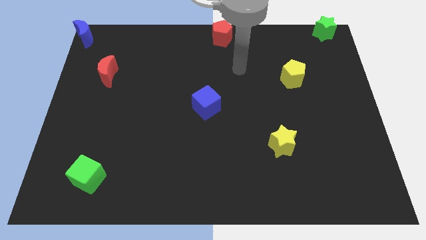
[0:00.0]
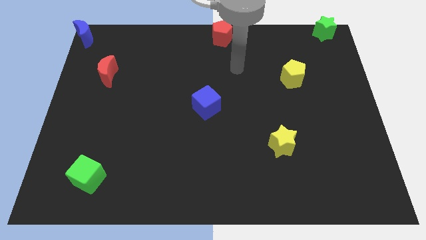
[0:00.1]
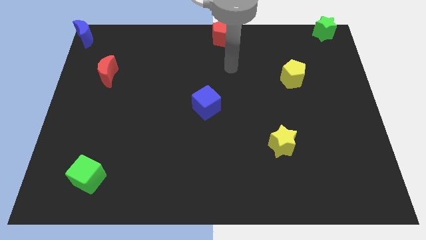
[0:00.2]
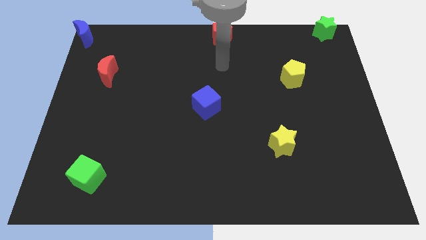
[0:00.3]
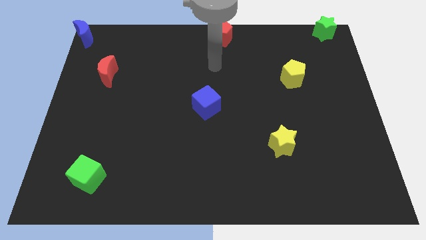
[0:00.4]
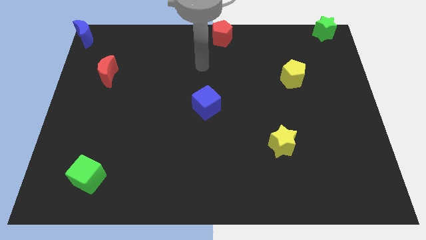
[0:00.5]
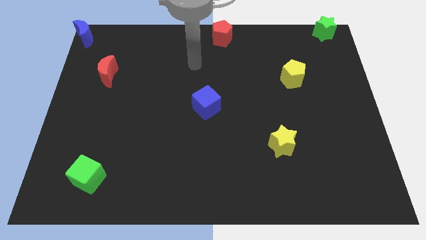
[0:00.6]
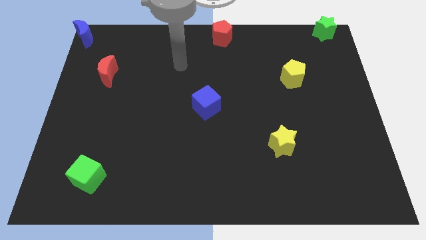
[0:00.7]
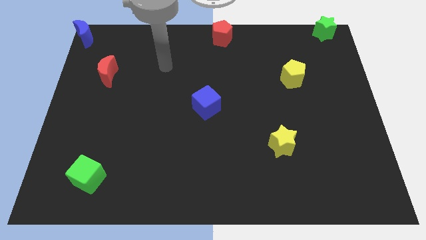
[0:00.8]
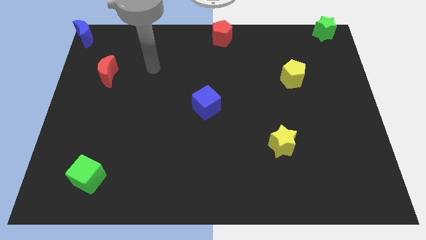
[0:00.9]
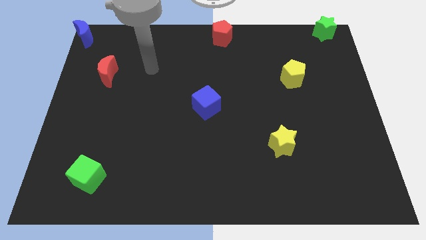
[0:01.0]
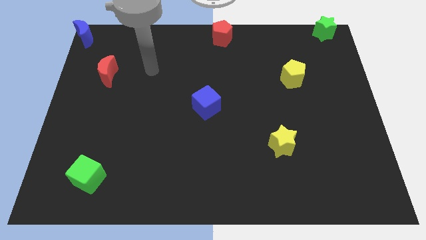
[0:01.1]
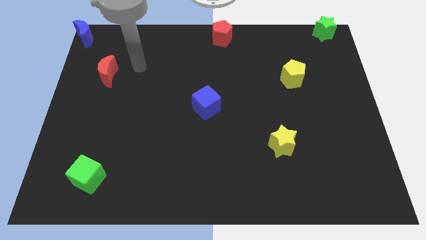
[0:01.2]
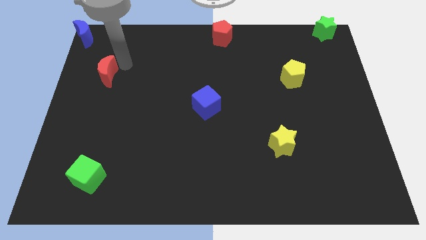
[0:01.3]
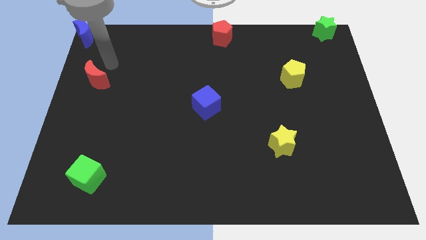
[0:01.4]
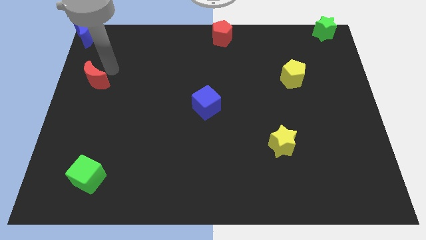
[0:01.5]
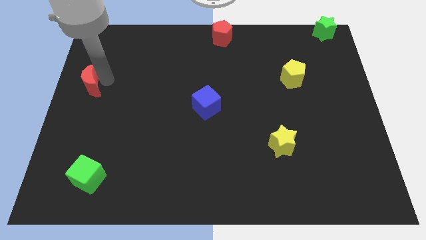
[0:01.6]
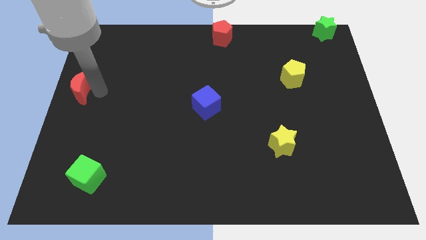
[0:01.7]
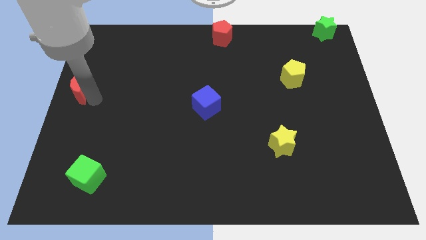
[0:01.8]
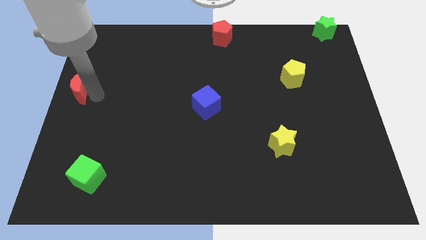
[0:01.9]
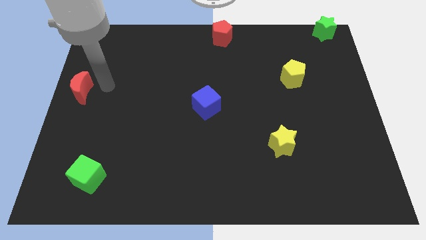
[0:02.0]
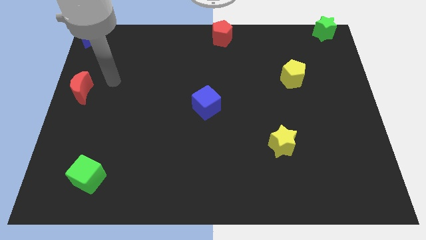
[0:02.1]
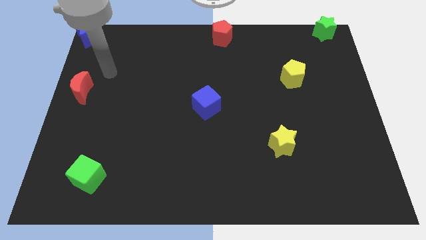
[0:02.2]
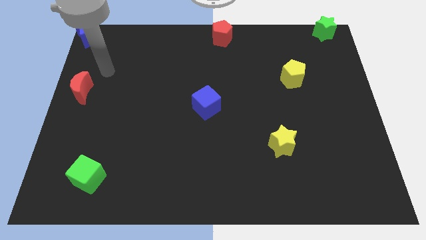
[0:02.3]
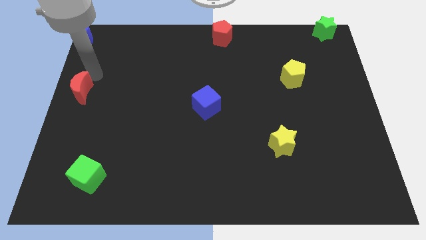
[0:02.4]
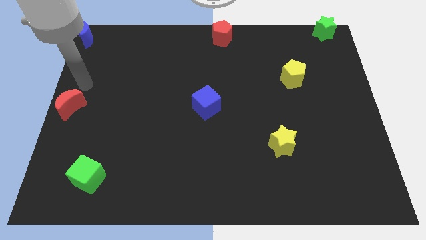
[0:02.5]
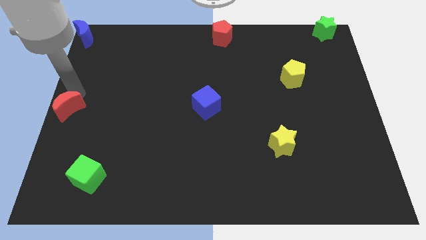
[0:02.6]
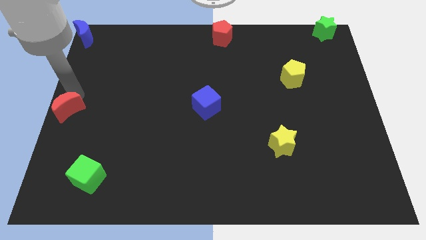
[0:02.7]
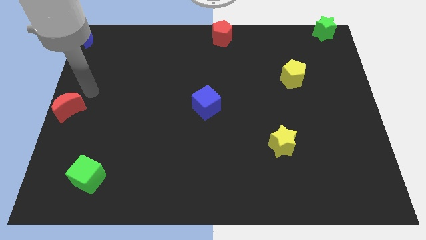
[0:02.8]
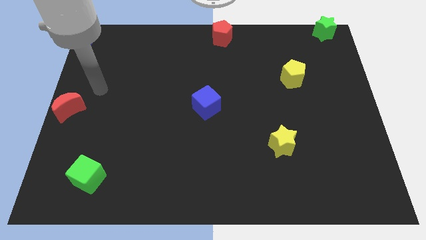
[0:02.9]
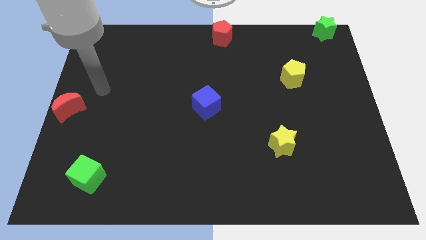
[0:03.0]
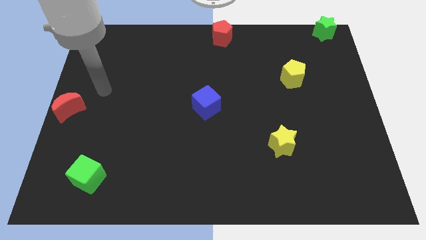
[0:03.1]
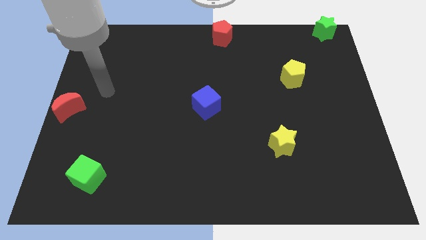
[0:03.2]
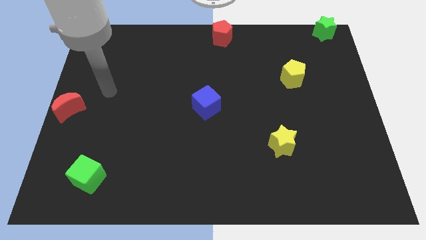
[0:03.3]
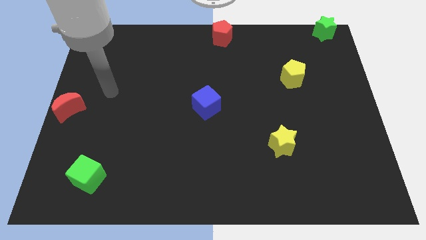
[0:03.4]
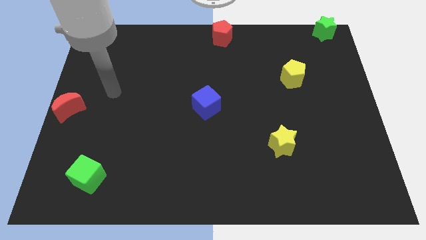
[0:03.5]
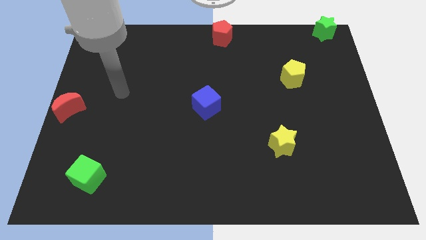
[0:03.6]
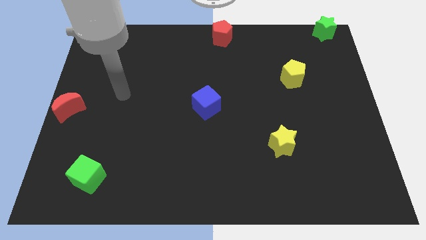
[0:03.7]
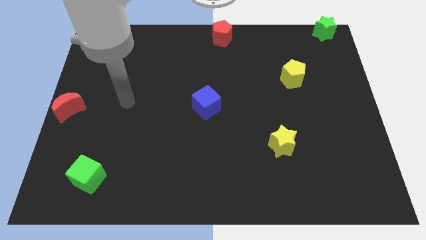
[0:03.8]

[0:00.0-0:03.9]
move the red crescent to the left center of the board

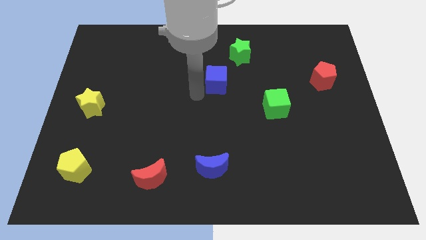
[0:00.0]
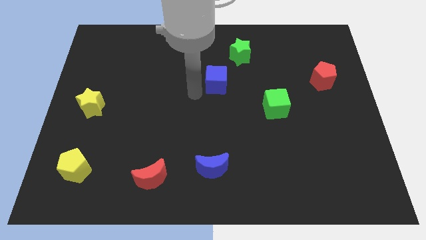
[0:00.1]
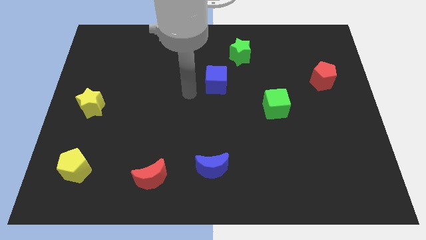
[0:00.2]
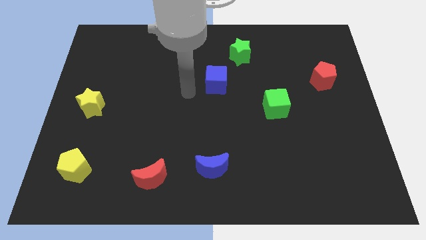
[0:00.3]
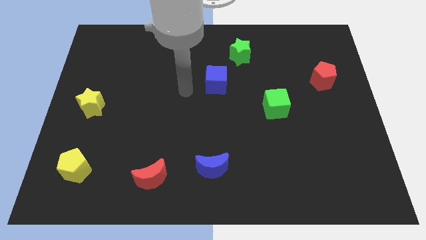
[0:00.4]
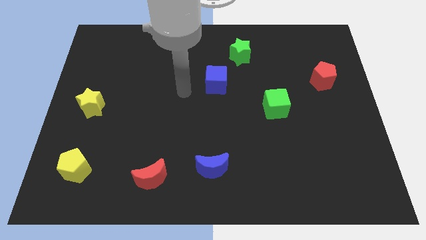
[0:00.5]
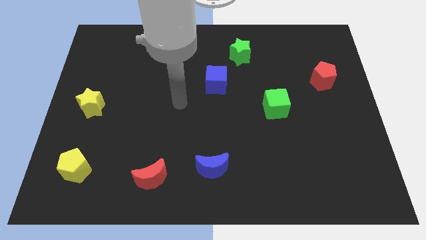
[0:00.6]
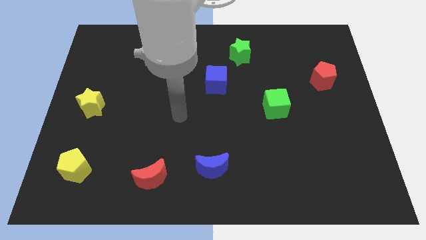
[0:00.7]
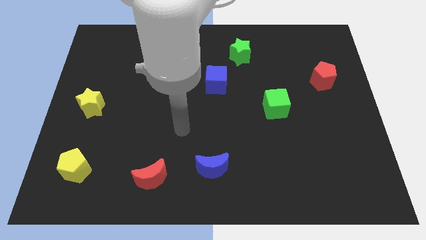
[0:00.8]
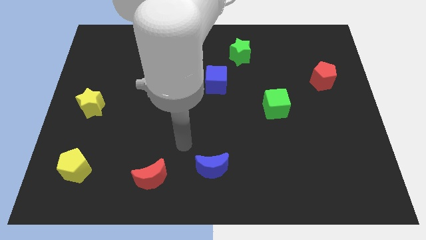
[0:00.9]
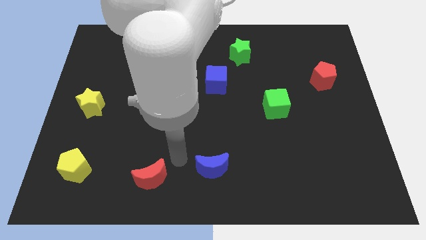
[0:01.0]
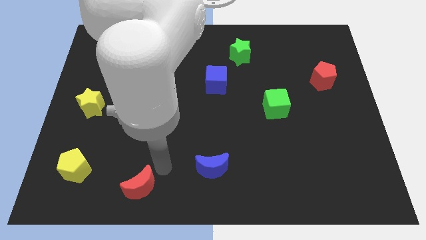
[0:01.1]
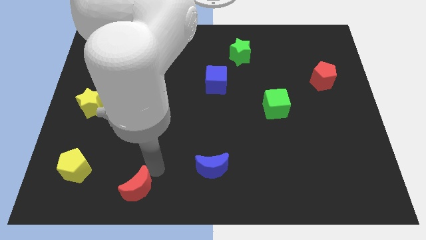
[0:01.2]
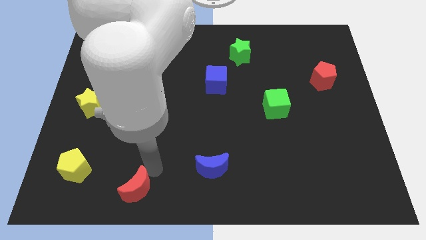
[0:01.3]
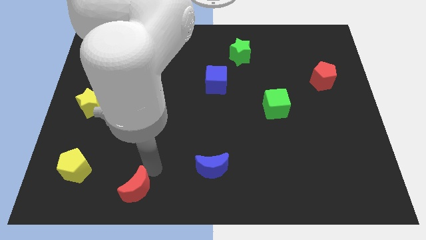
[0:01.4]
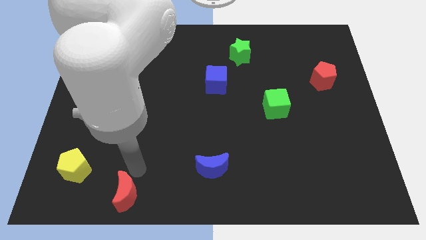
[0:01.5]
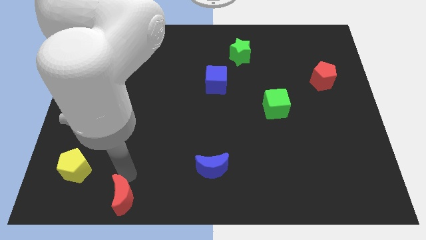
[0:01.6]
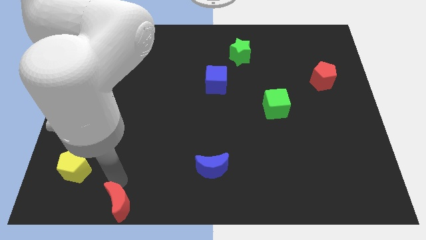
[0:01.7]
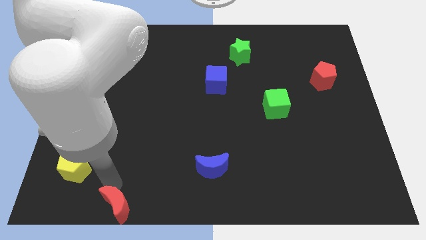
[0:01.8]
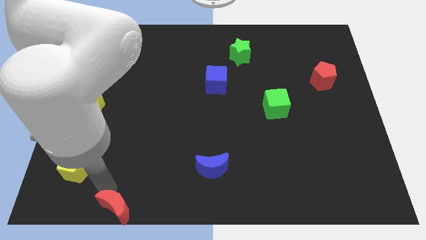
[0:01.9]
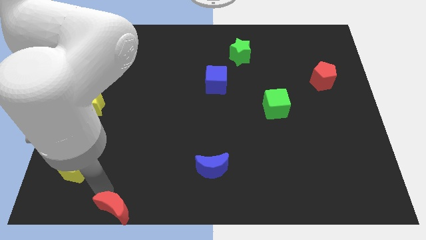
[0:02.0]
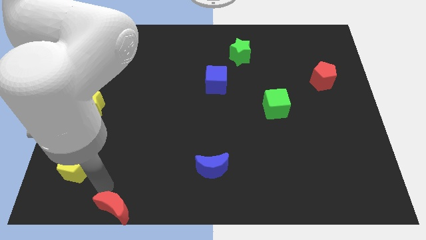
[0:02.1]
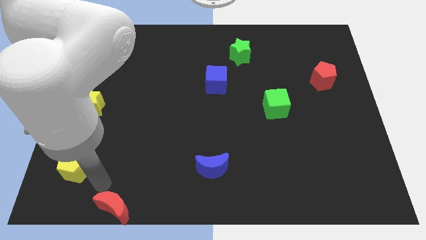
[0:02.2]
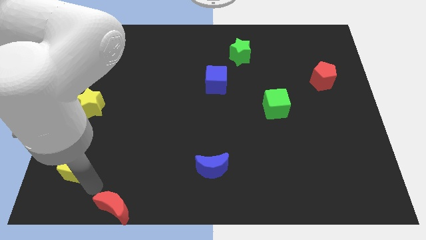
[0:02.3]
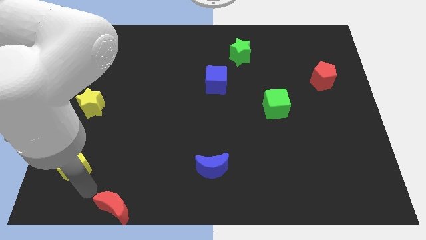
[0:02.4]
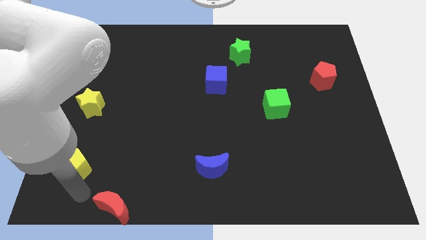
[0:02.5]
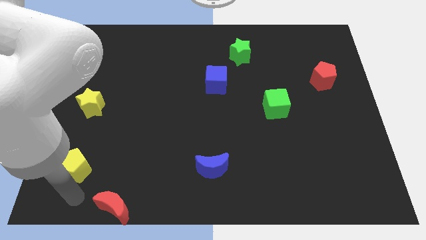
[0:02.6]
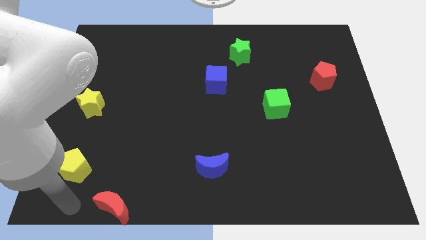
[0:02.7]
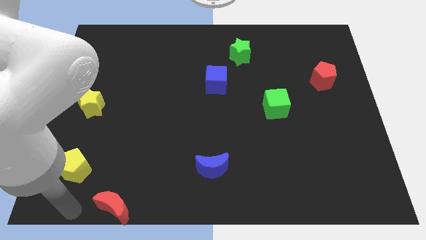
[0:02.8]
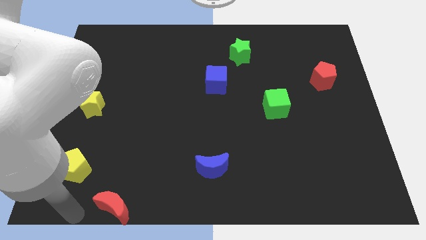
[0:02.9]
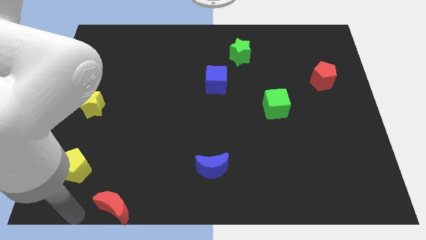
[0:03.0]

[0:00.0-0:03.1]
push the red crescent slightly towards the bottom left of the board

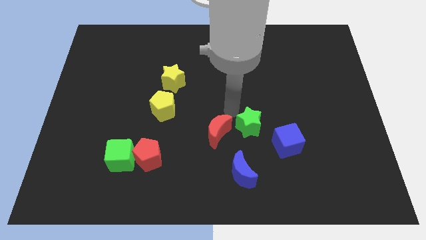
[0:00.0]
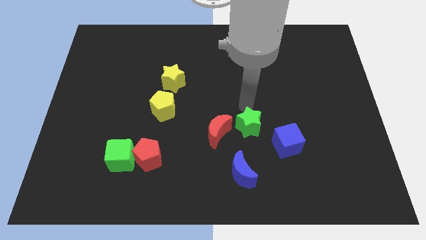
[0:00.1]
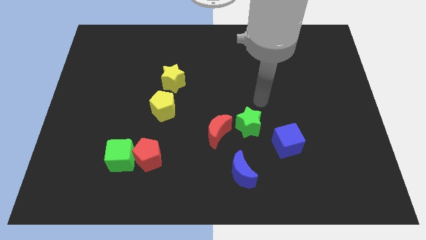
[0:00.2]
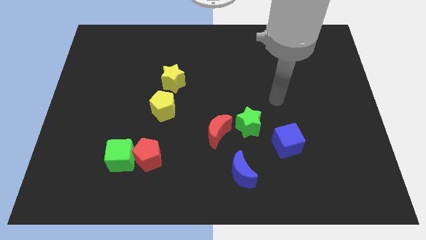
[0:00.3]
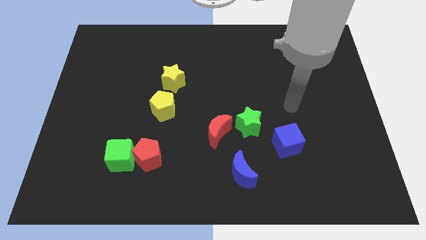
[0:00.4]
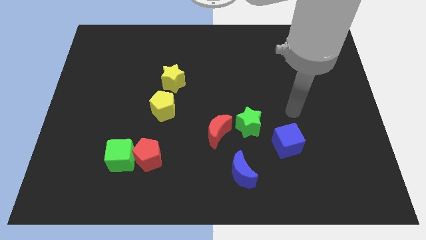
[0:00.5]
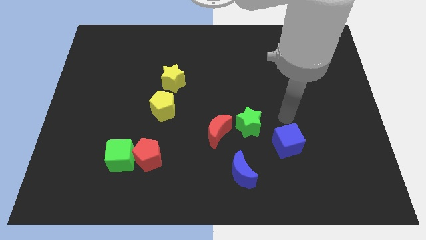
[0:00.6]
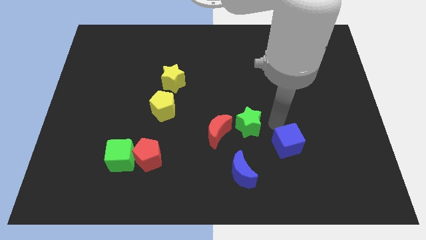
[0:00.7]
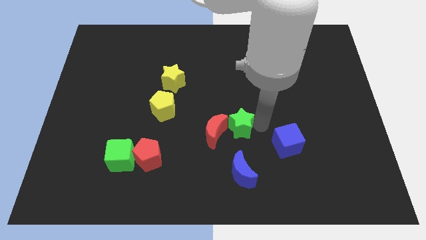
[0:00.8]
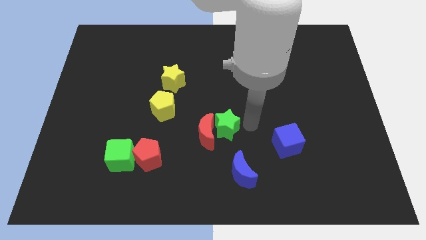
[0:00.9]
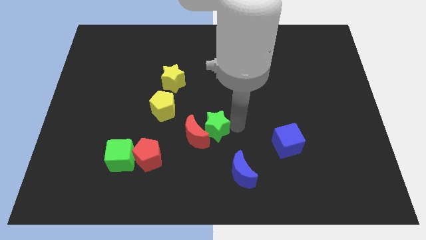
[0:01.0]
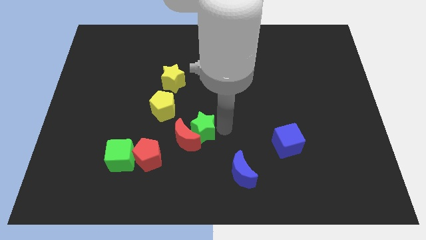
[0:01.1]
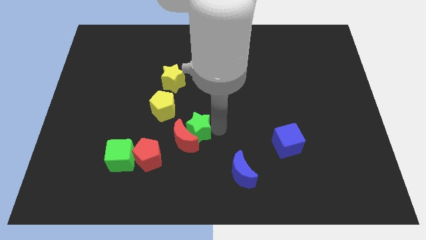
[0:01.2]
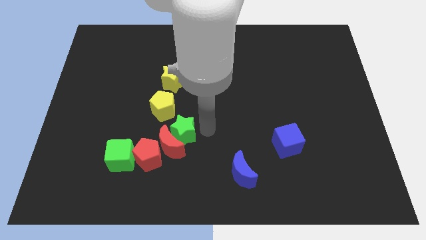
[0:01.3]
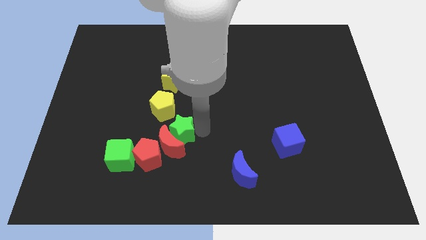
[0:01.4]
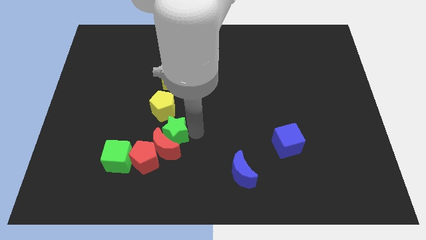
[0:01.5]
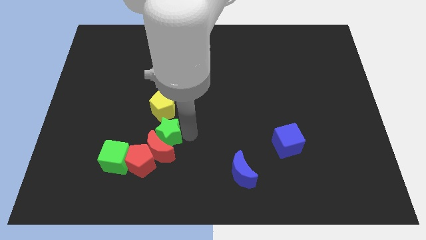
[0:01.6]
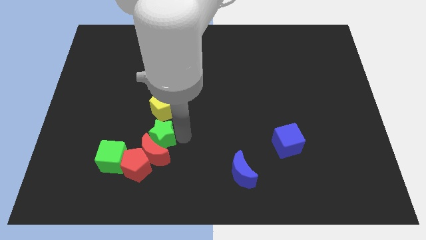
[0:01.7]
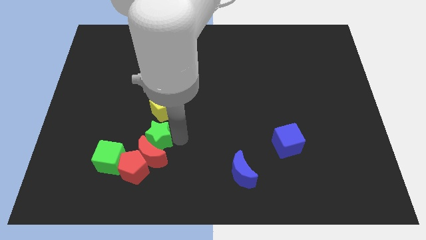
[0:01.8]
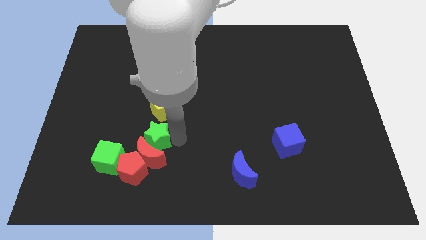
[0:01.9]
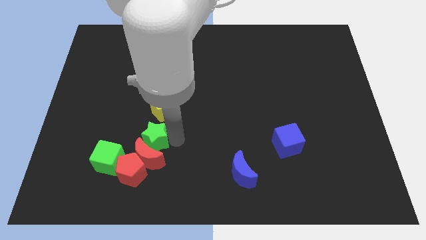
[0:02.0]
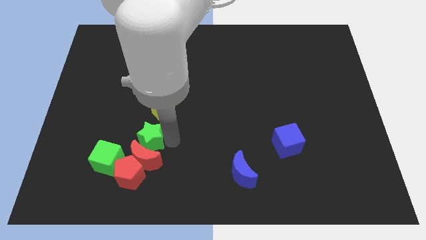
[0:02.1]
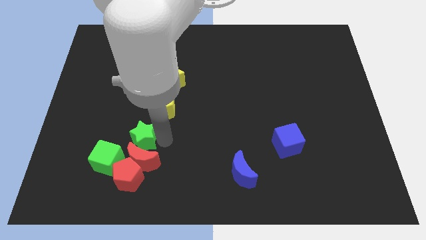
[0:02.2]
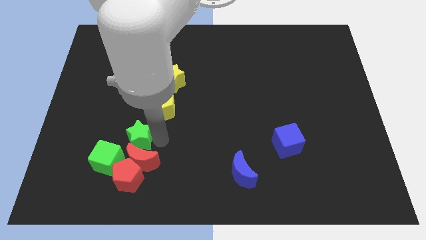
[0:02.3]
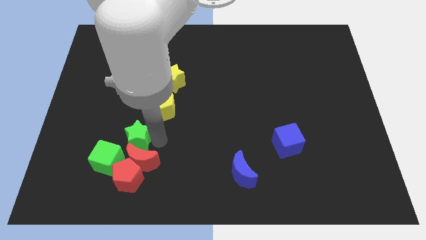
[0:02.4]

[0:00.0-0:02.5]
push the green star into the red moon
